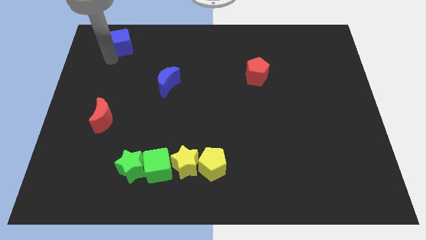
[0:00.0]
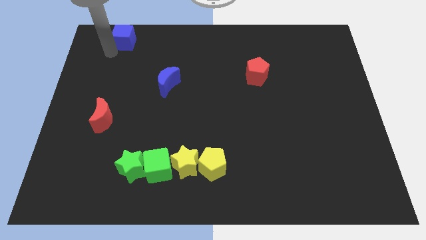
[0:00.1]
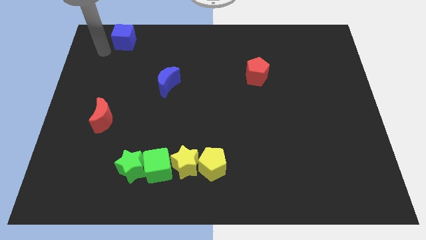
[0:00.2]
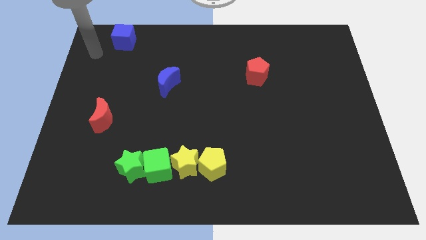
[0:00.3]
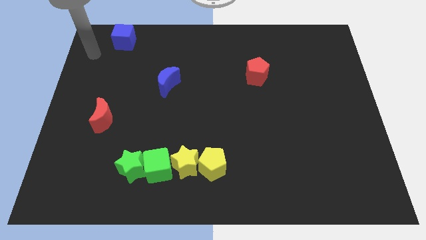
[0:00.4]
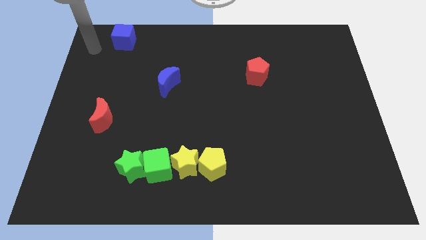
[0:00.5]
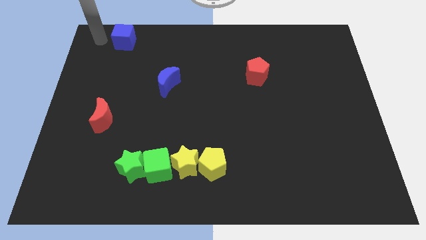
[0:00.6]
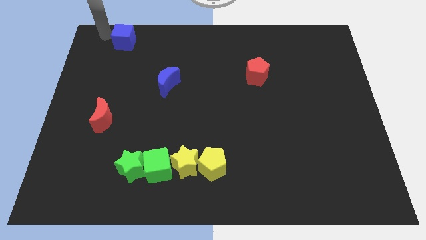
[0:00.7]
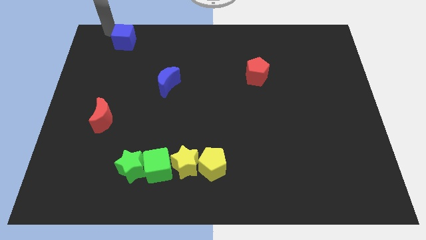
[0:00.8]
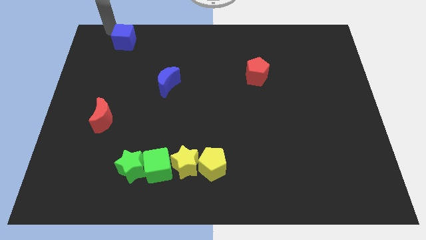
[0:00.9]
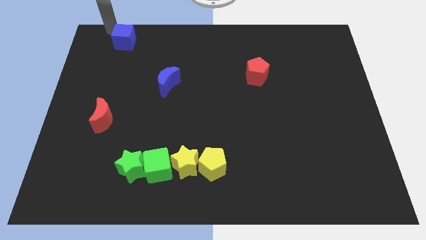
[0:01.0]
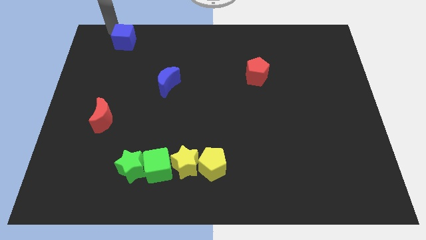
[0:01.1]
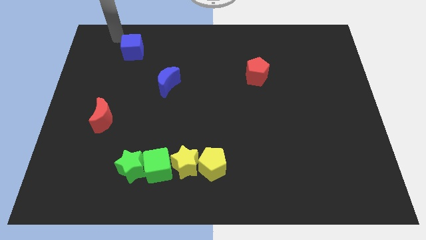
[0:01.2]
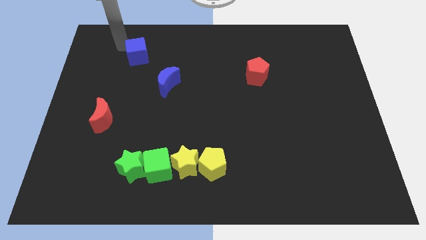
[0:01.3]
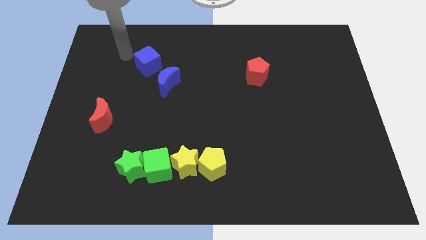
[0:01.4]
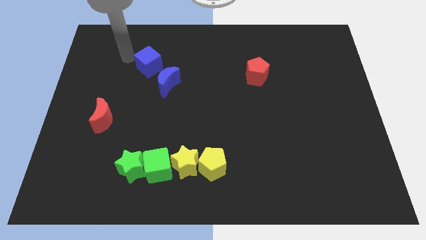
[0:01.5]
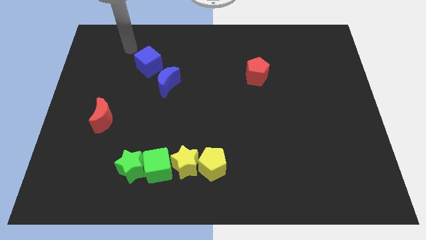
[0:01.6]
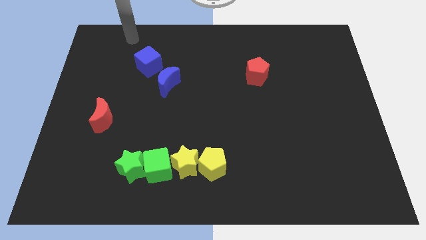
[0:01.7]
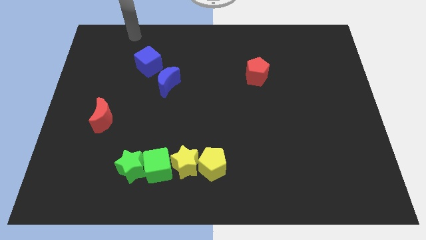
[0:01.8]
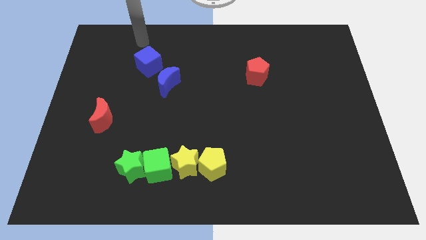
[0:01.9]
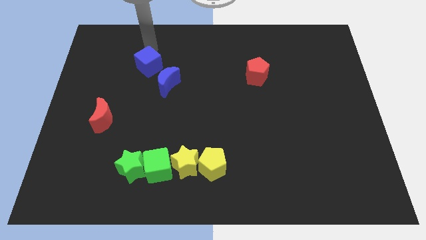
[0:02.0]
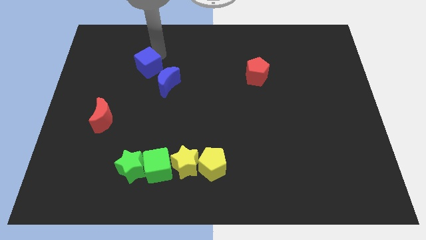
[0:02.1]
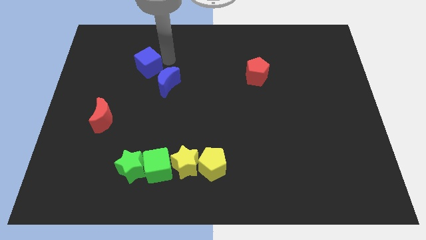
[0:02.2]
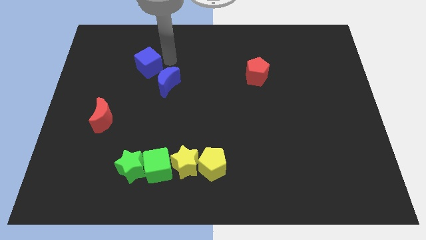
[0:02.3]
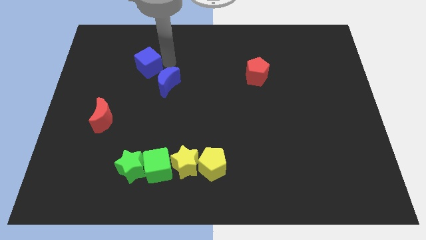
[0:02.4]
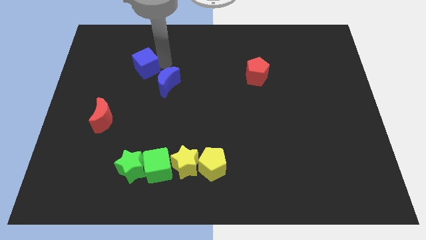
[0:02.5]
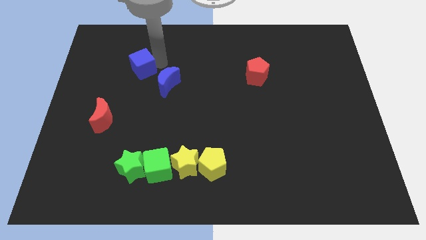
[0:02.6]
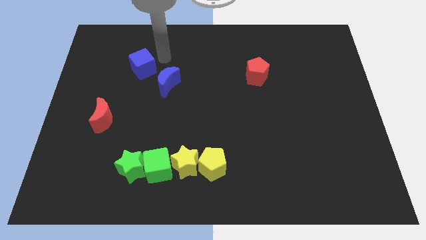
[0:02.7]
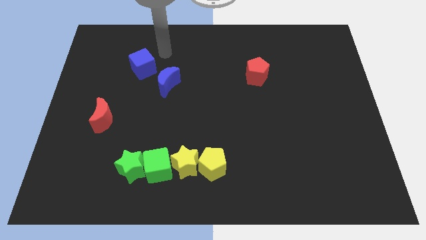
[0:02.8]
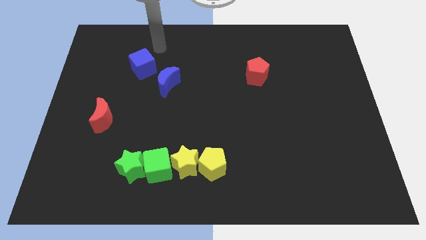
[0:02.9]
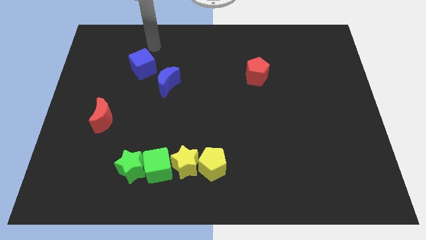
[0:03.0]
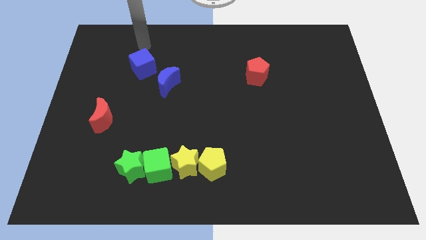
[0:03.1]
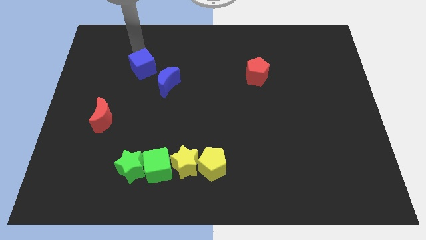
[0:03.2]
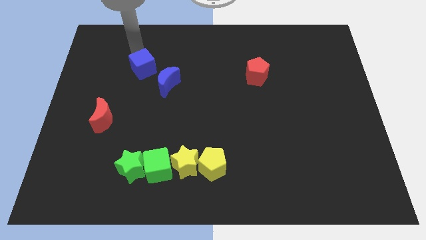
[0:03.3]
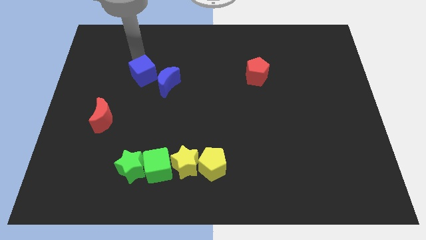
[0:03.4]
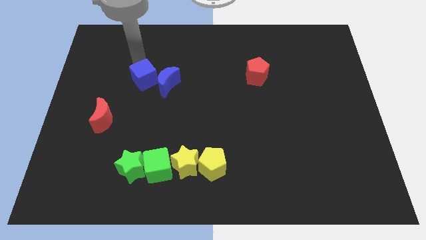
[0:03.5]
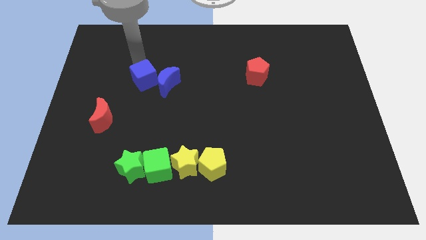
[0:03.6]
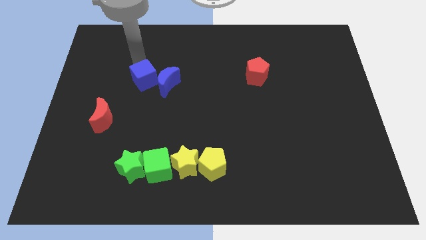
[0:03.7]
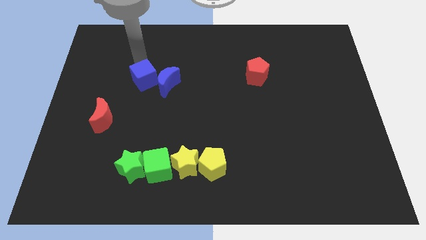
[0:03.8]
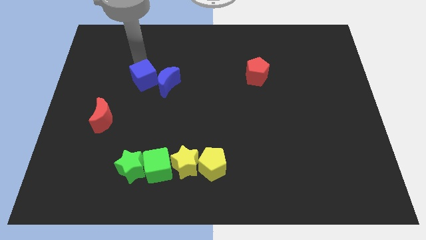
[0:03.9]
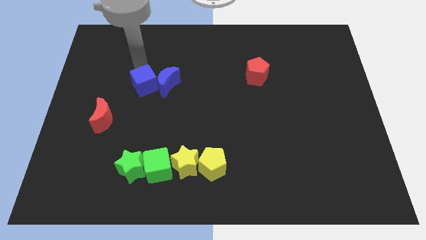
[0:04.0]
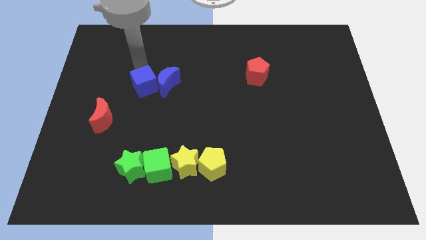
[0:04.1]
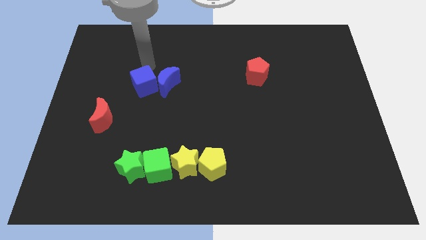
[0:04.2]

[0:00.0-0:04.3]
push the blue block adjacent to blue crescent

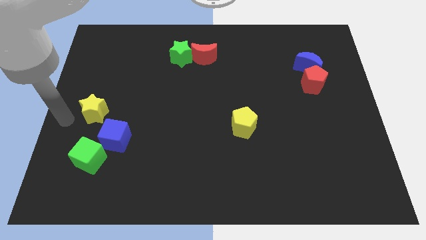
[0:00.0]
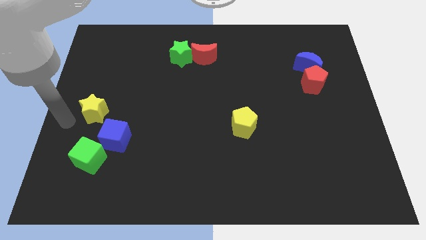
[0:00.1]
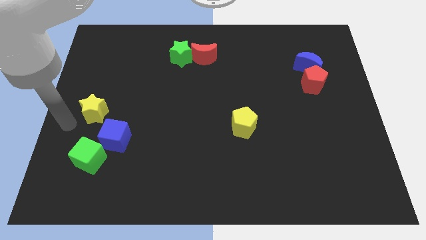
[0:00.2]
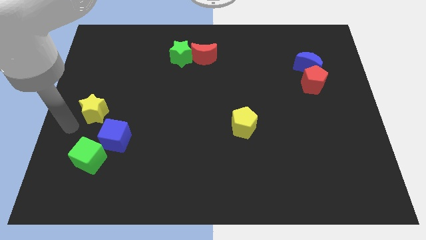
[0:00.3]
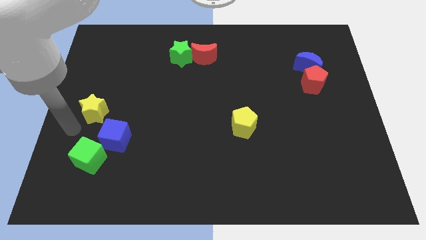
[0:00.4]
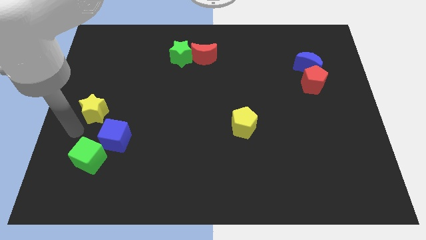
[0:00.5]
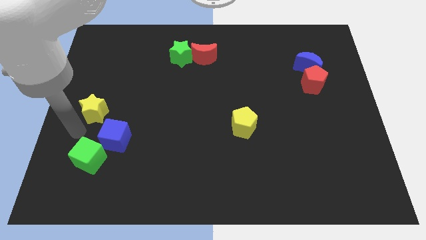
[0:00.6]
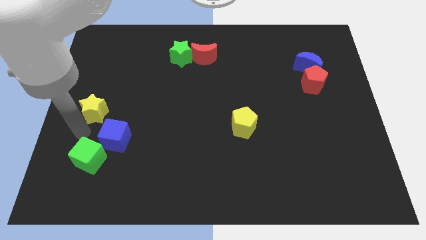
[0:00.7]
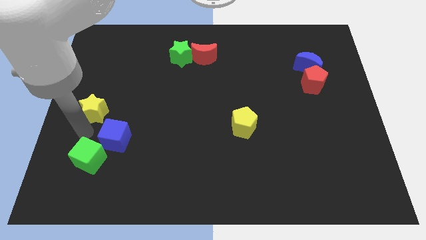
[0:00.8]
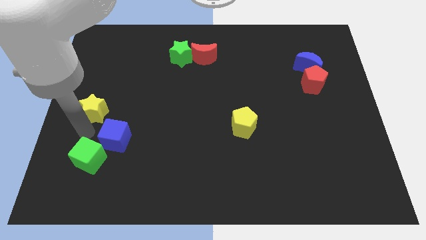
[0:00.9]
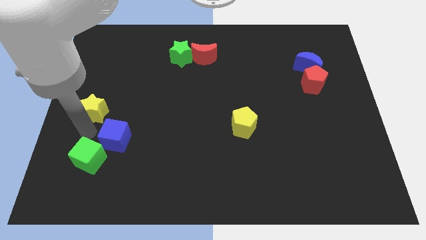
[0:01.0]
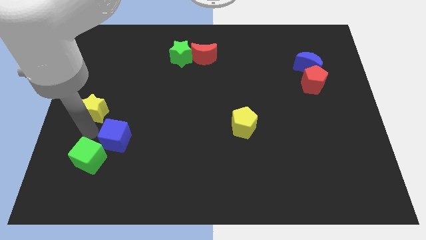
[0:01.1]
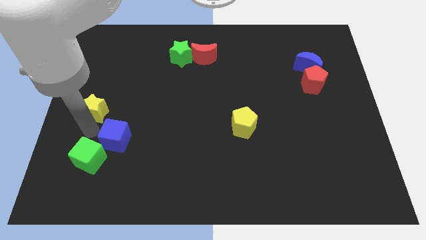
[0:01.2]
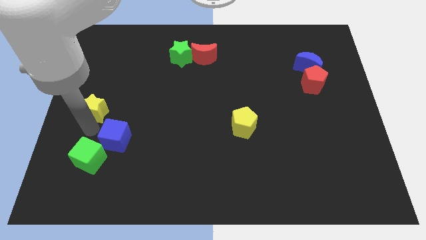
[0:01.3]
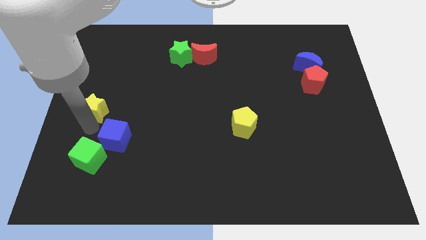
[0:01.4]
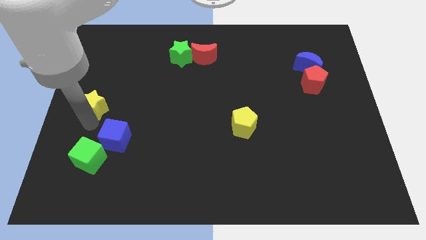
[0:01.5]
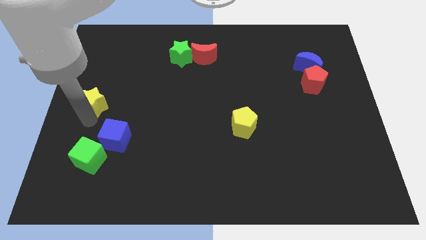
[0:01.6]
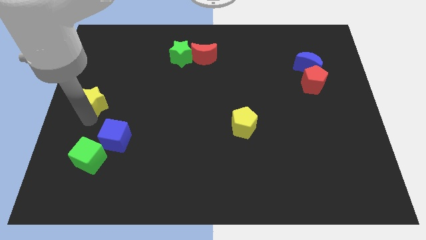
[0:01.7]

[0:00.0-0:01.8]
touch at the bottom side of the yellow star

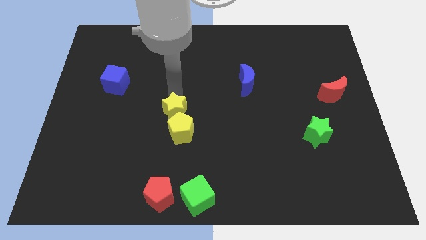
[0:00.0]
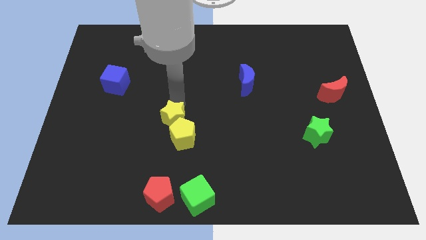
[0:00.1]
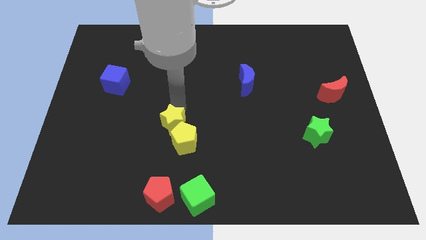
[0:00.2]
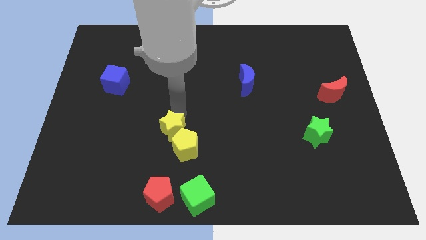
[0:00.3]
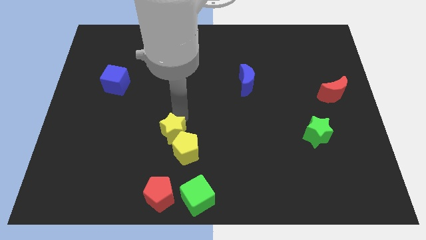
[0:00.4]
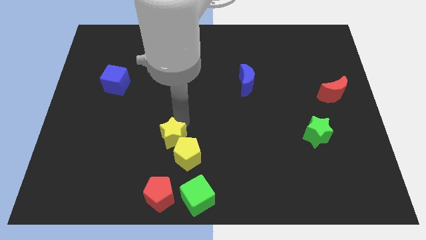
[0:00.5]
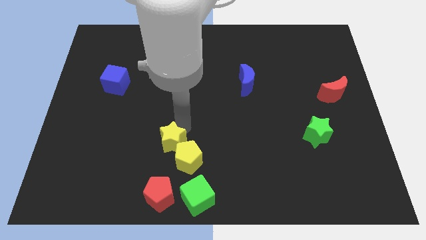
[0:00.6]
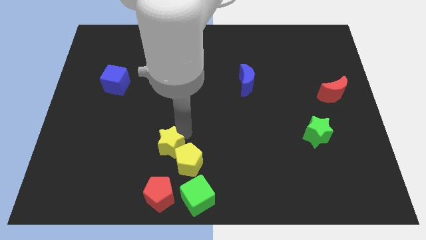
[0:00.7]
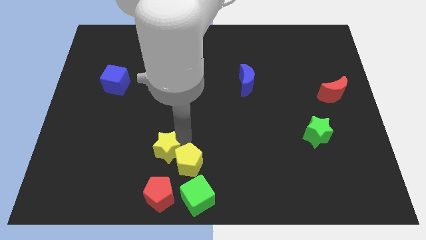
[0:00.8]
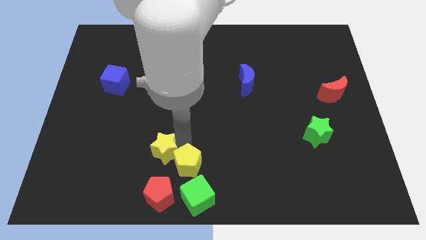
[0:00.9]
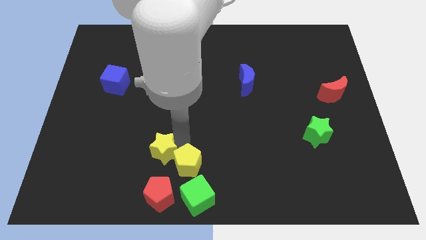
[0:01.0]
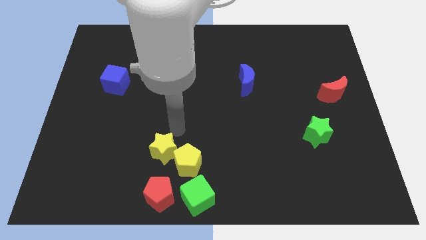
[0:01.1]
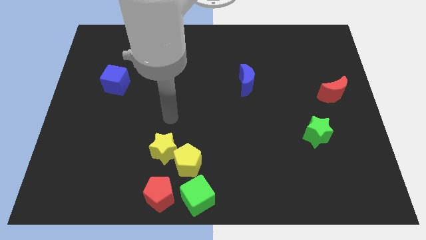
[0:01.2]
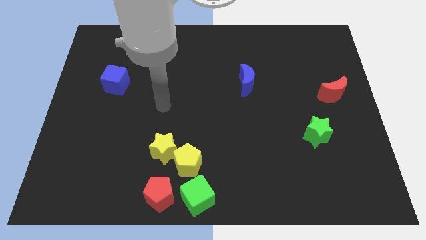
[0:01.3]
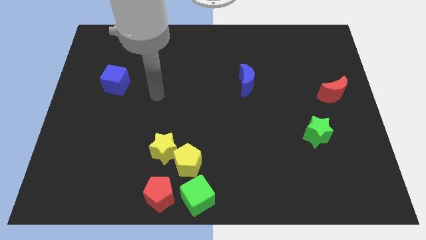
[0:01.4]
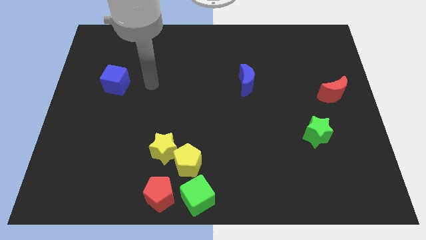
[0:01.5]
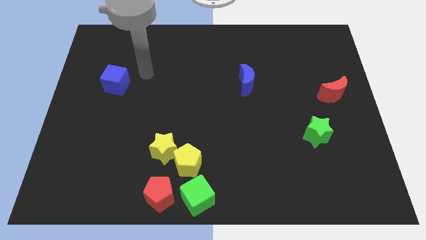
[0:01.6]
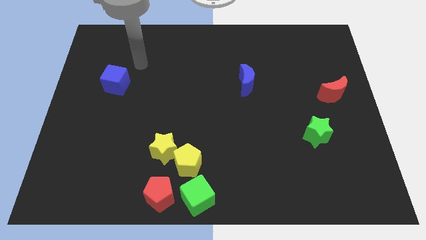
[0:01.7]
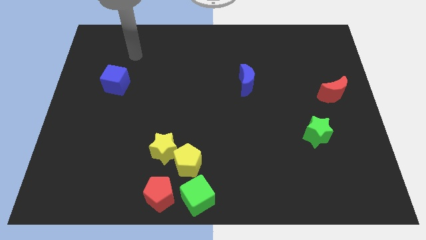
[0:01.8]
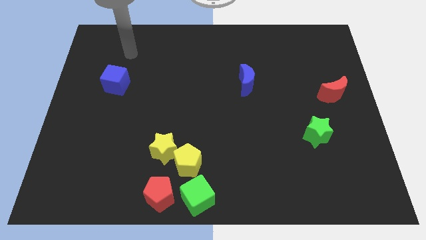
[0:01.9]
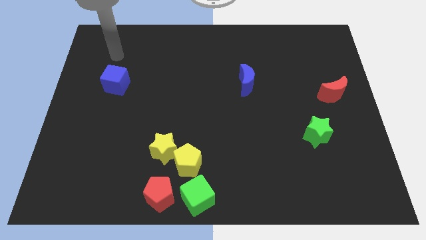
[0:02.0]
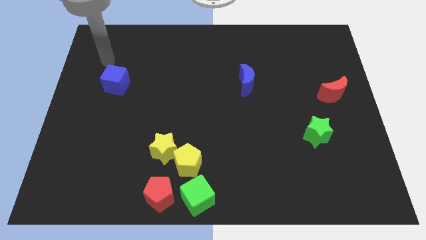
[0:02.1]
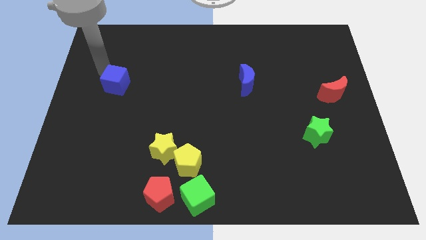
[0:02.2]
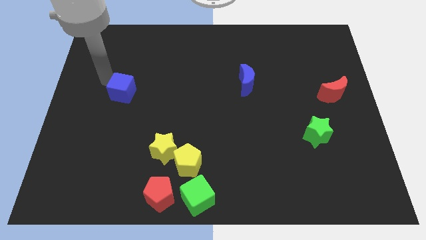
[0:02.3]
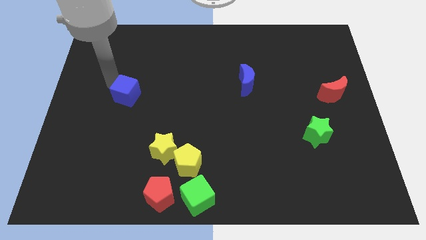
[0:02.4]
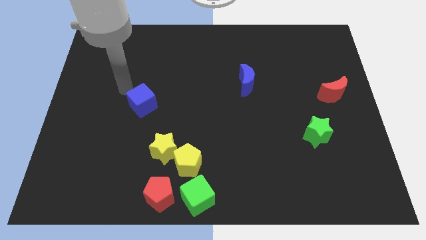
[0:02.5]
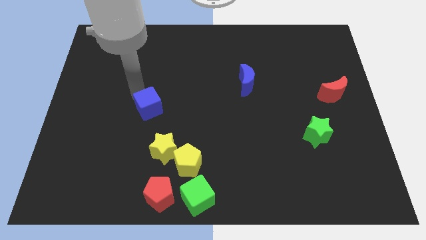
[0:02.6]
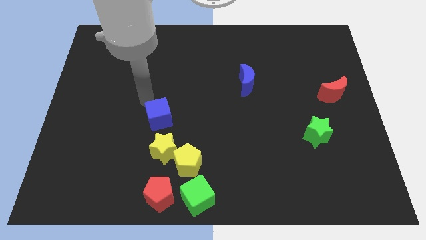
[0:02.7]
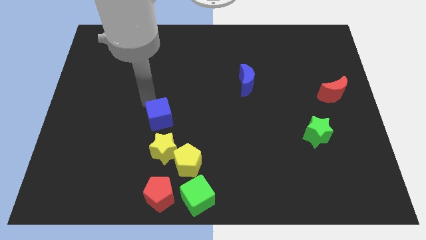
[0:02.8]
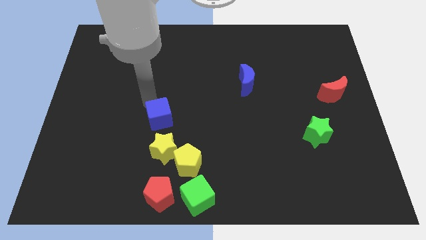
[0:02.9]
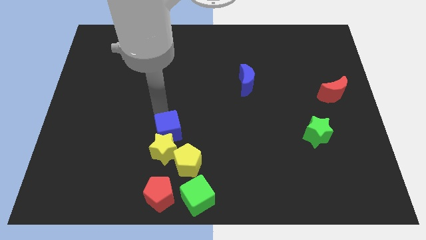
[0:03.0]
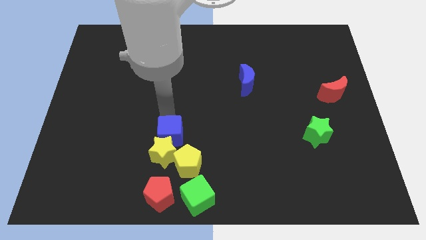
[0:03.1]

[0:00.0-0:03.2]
push the yellow blocks and blue moon towards yellow star
